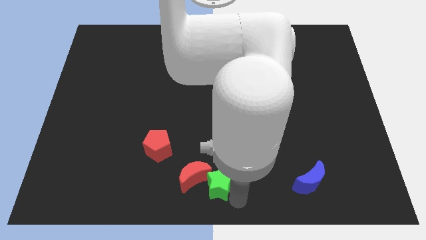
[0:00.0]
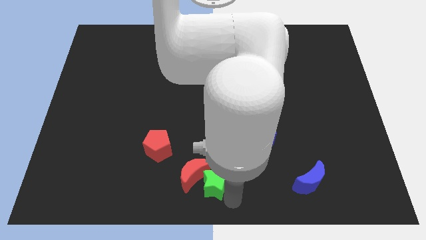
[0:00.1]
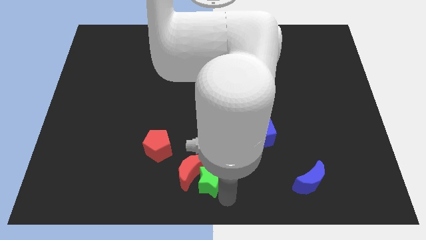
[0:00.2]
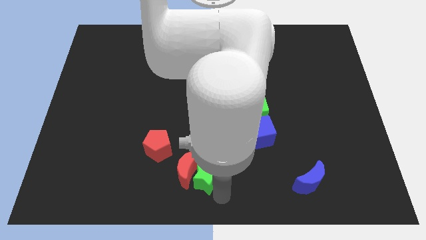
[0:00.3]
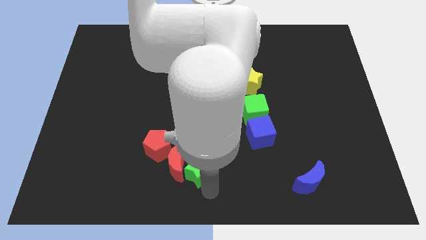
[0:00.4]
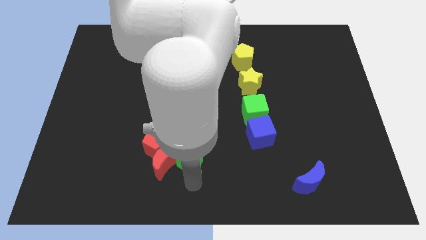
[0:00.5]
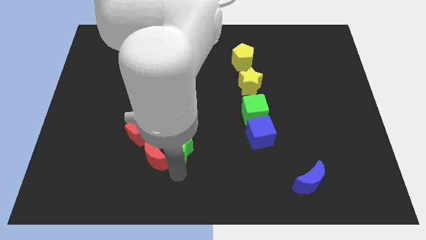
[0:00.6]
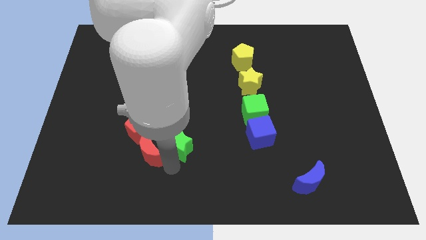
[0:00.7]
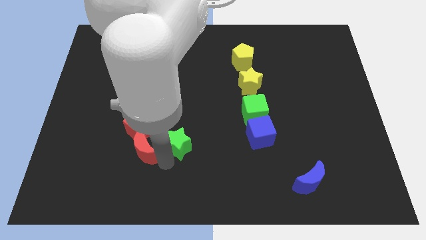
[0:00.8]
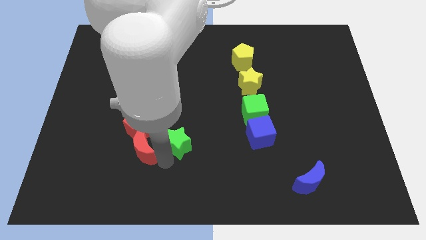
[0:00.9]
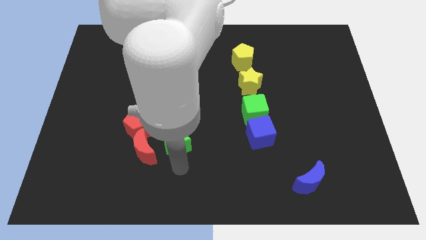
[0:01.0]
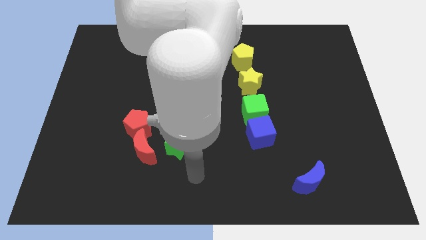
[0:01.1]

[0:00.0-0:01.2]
slide red moon and green star into red pentagon

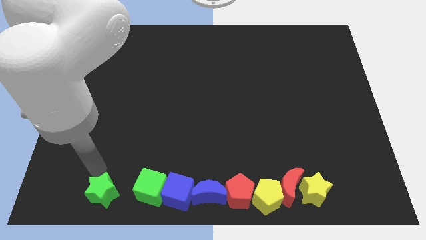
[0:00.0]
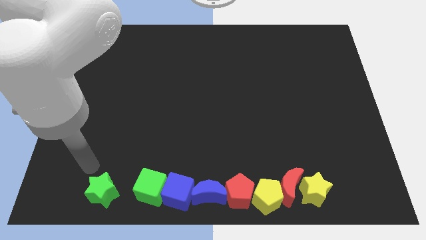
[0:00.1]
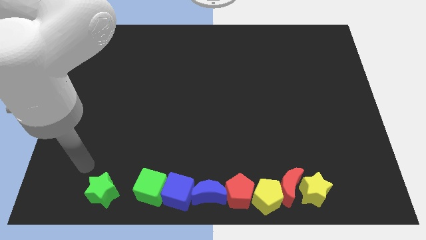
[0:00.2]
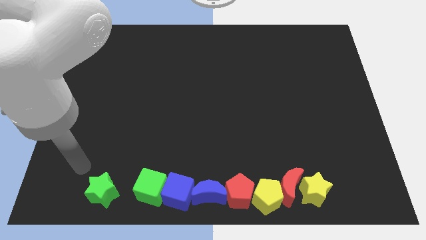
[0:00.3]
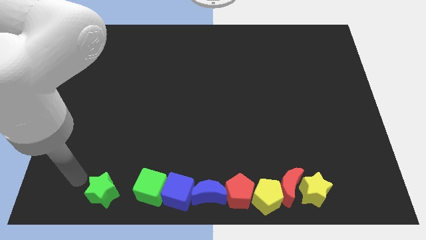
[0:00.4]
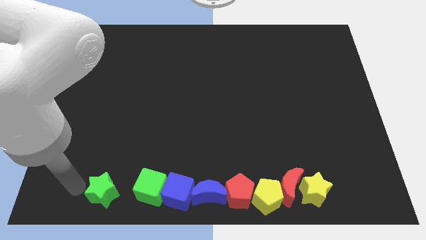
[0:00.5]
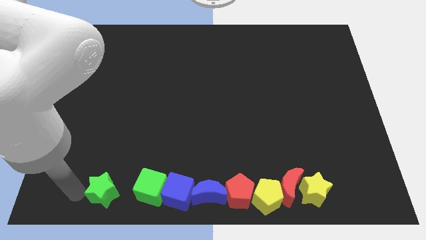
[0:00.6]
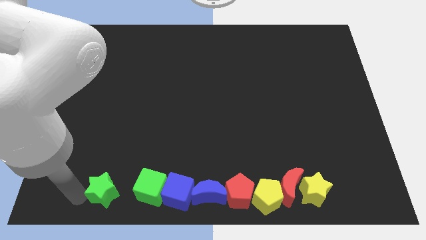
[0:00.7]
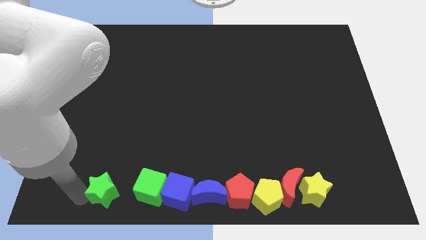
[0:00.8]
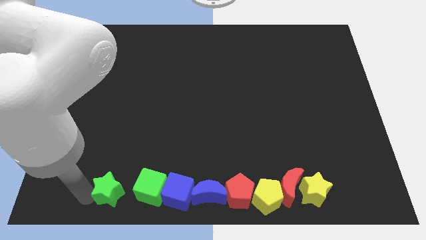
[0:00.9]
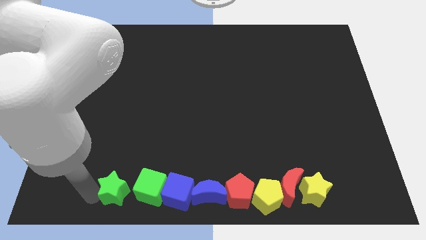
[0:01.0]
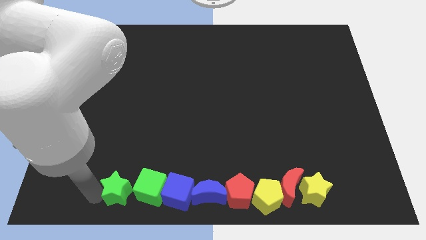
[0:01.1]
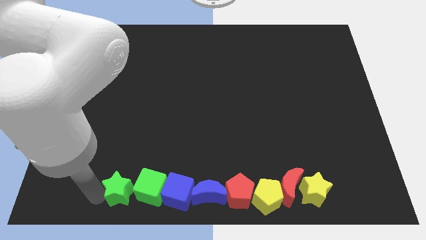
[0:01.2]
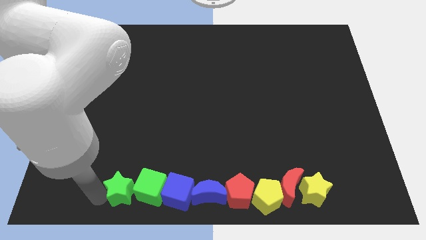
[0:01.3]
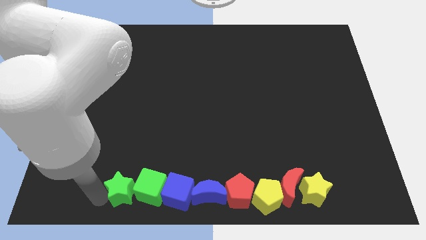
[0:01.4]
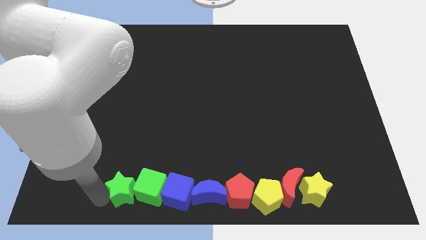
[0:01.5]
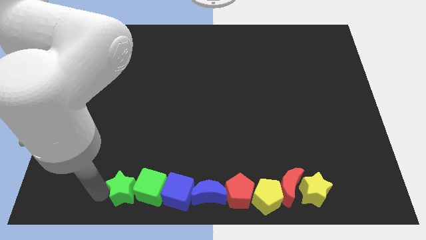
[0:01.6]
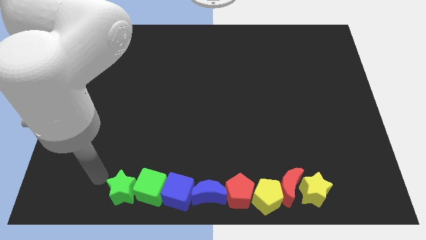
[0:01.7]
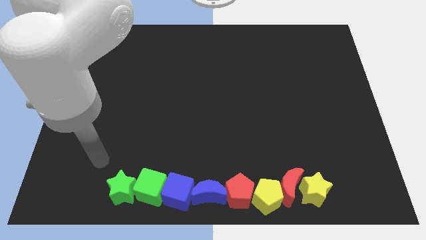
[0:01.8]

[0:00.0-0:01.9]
move green star left to the green cube

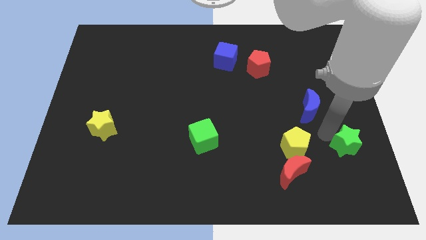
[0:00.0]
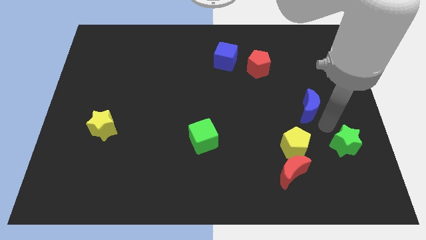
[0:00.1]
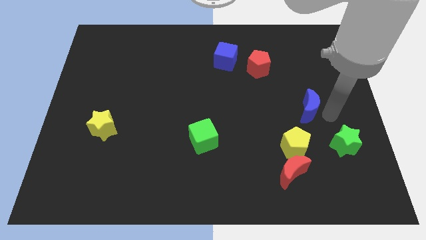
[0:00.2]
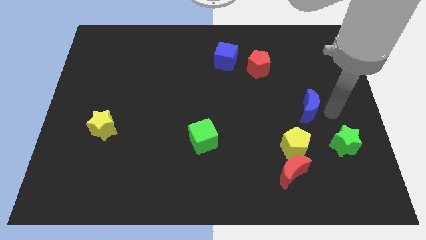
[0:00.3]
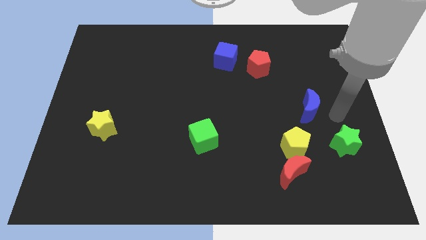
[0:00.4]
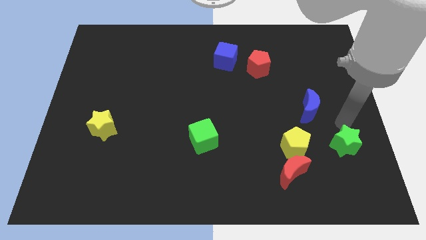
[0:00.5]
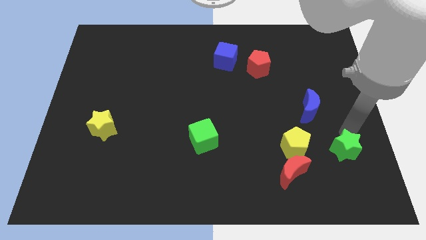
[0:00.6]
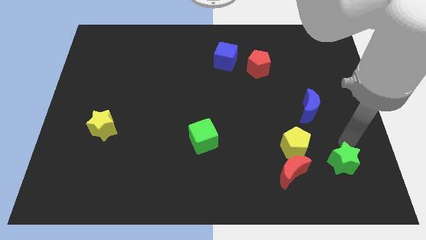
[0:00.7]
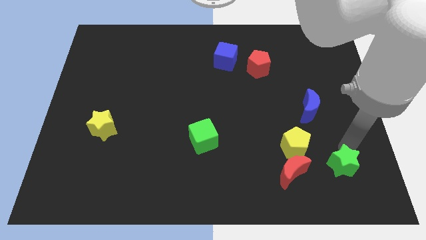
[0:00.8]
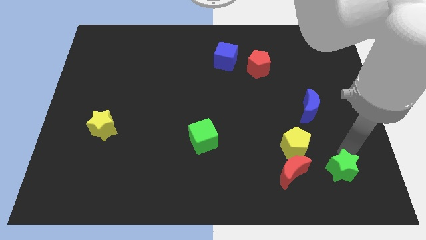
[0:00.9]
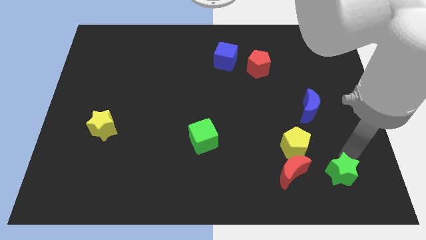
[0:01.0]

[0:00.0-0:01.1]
slide the green star down to the right of red moon

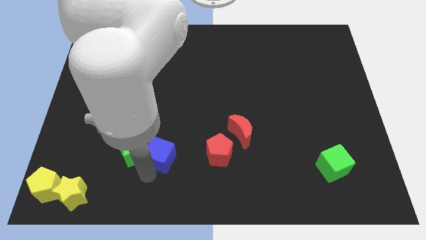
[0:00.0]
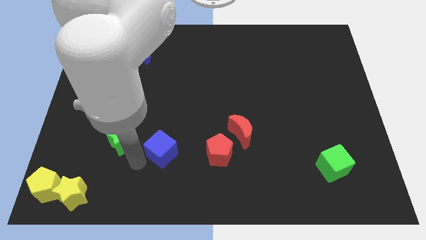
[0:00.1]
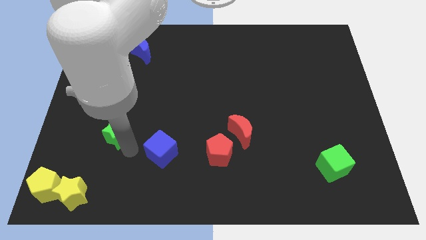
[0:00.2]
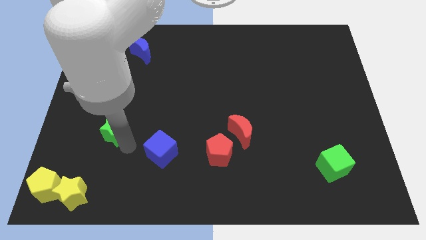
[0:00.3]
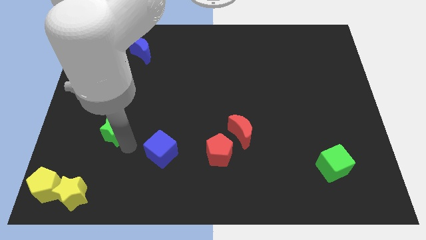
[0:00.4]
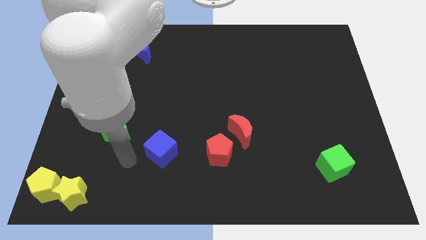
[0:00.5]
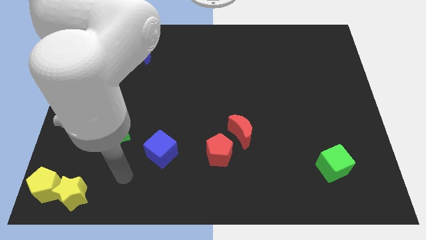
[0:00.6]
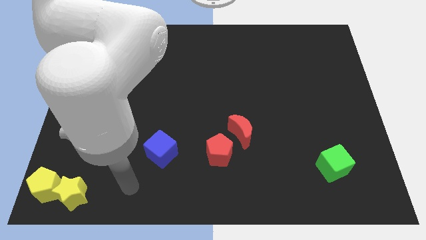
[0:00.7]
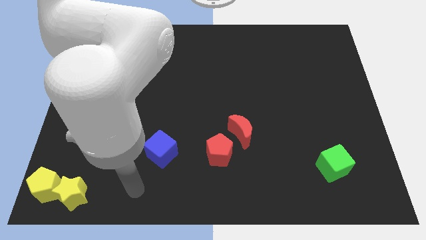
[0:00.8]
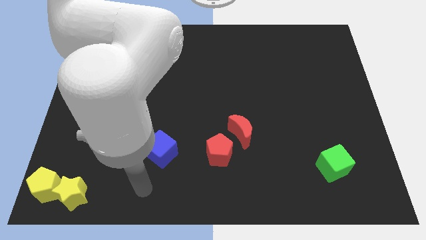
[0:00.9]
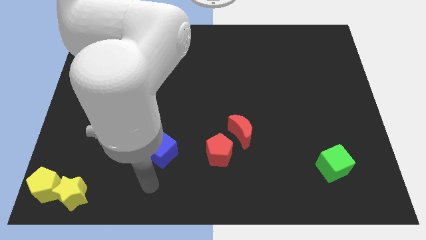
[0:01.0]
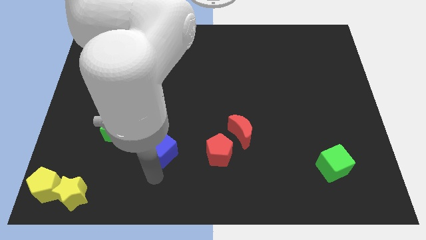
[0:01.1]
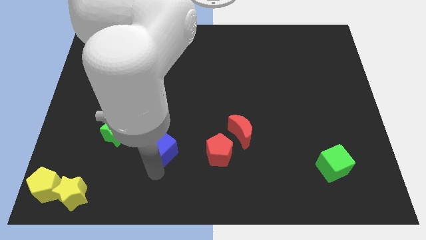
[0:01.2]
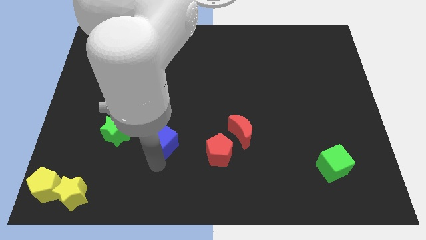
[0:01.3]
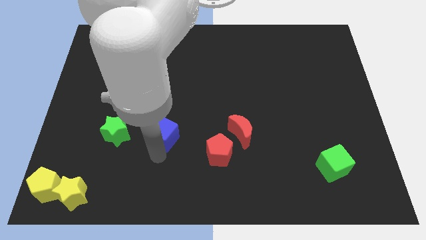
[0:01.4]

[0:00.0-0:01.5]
separate the green star and blue cube

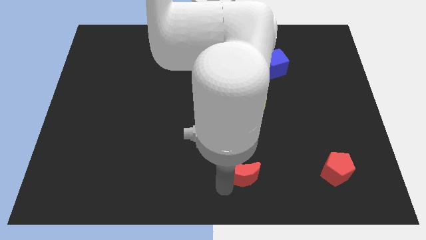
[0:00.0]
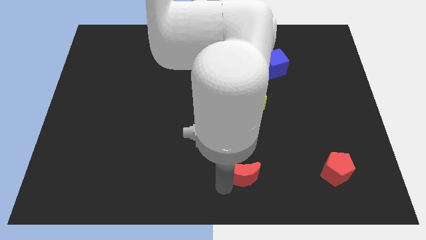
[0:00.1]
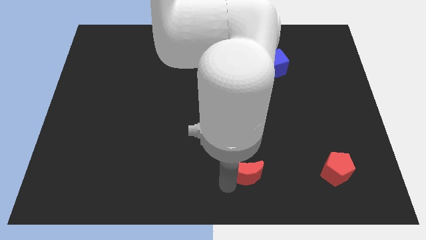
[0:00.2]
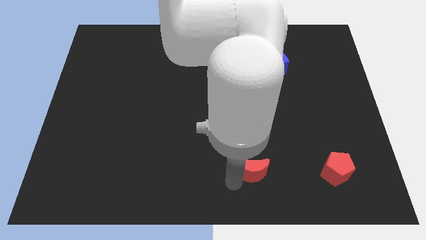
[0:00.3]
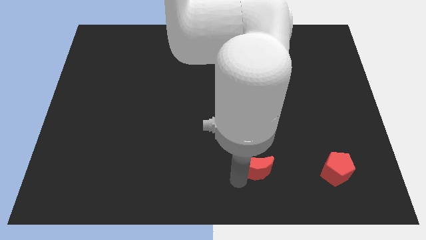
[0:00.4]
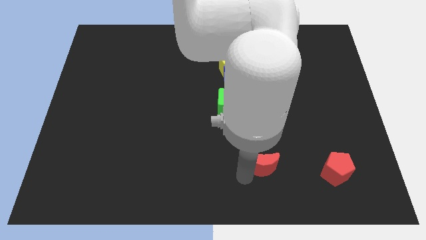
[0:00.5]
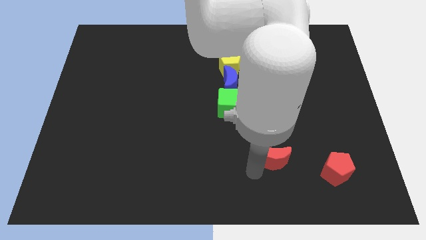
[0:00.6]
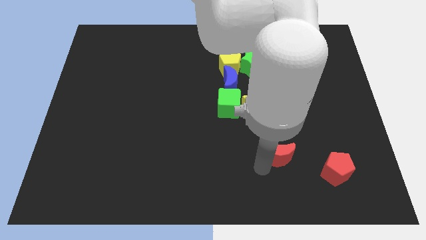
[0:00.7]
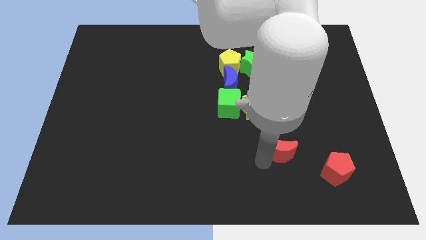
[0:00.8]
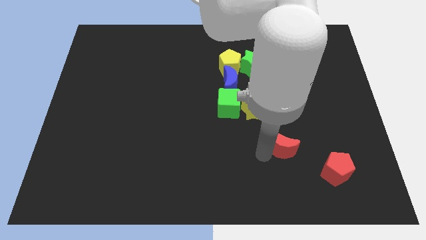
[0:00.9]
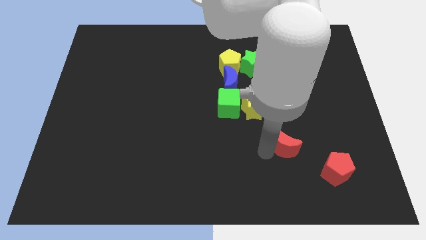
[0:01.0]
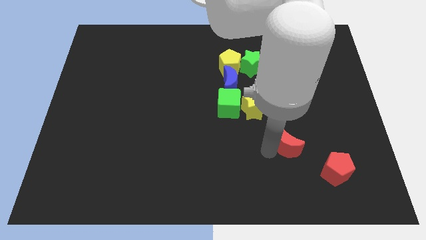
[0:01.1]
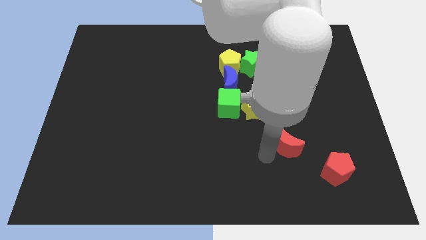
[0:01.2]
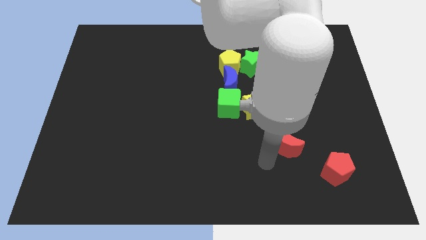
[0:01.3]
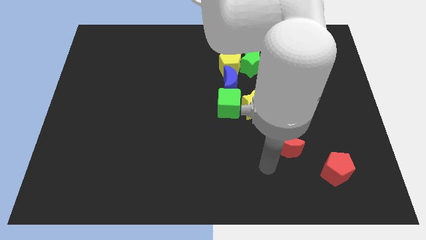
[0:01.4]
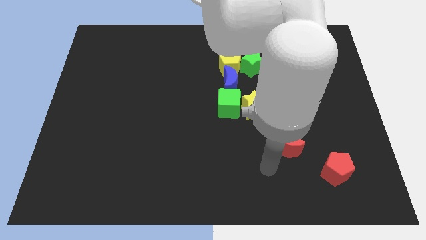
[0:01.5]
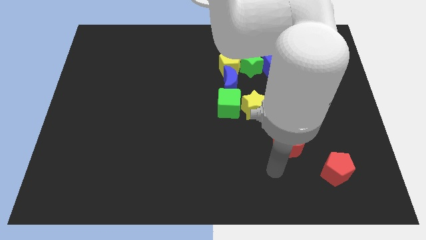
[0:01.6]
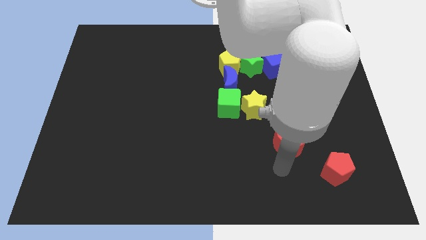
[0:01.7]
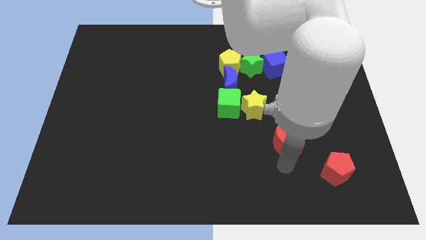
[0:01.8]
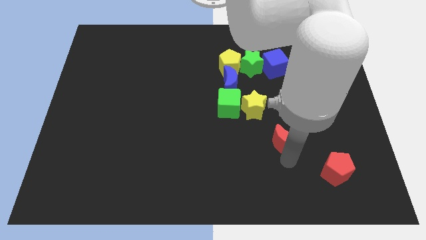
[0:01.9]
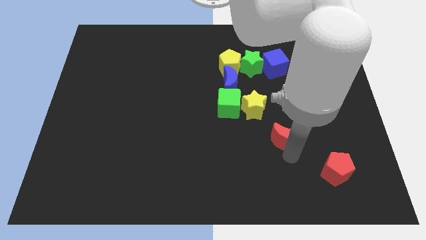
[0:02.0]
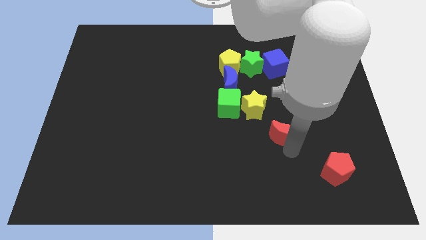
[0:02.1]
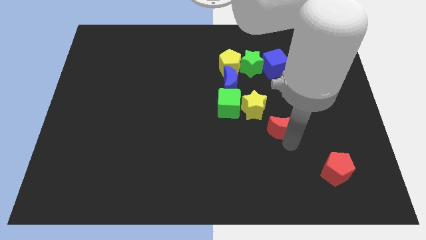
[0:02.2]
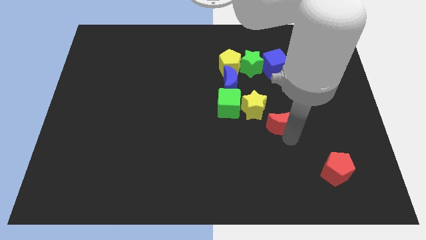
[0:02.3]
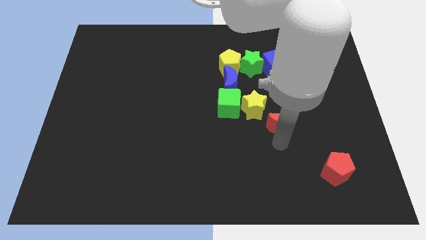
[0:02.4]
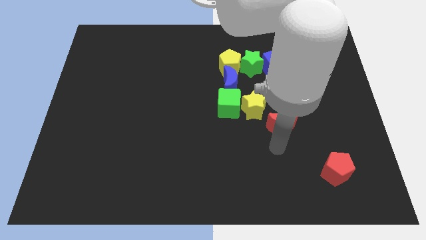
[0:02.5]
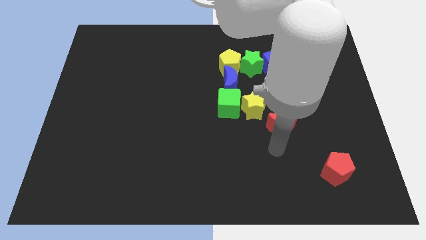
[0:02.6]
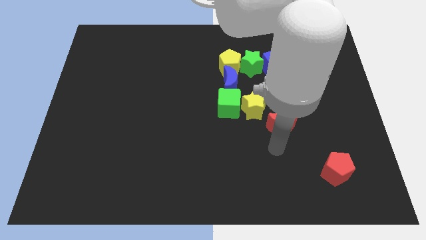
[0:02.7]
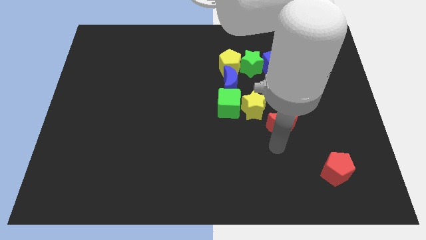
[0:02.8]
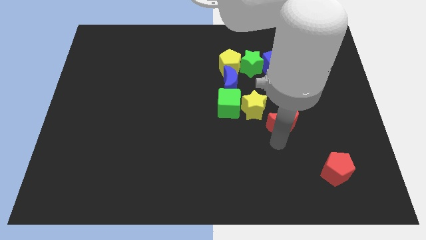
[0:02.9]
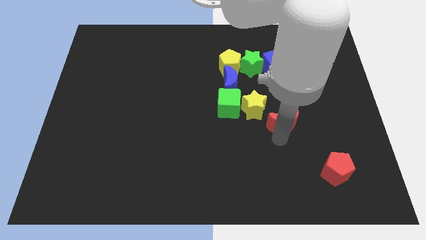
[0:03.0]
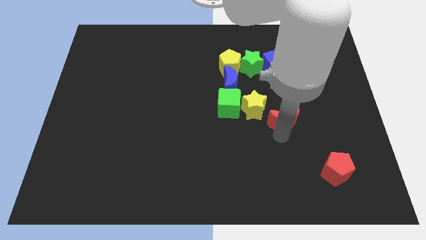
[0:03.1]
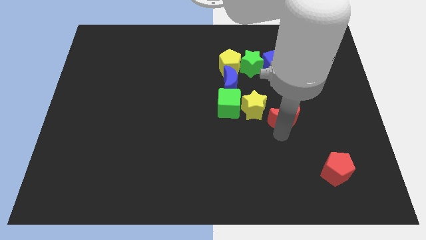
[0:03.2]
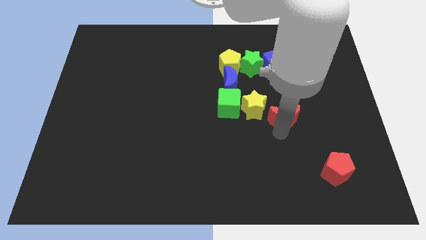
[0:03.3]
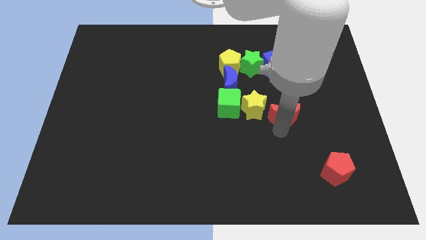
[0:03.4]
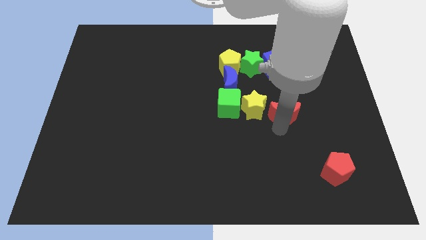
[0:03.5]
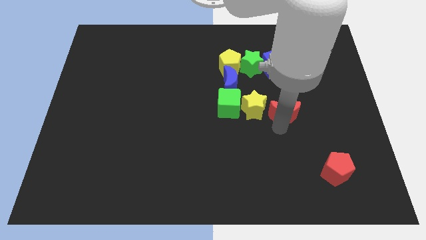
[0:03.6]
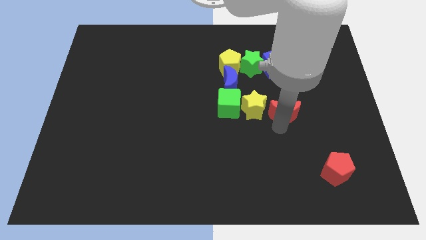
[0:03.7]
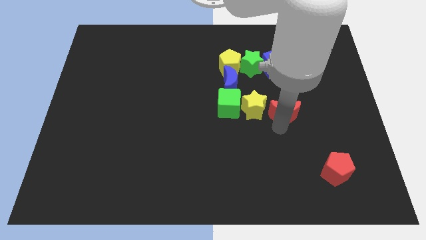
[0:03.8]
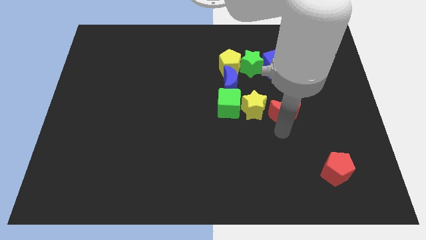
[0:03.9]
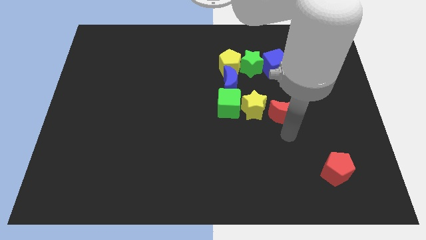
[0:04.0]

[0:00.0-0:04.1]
move the red crescent right to the yellow star
